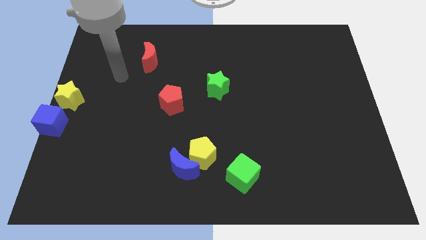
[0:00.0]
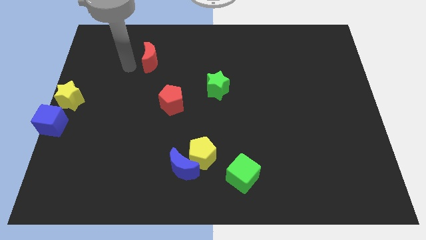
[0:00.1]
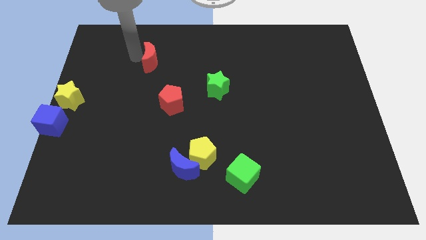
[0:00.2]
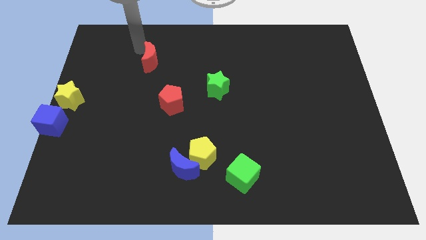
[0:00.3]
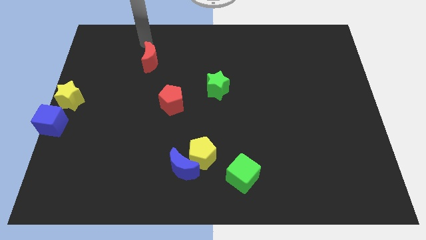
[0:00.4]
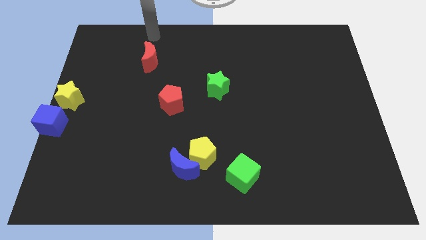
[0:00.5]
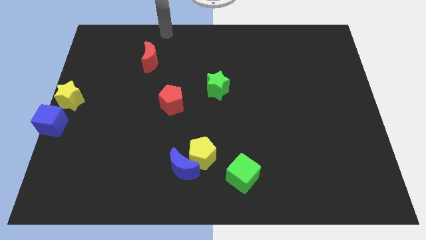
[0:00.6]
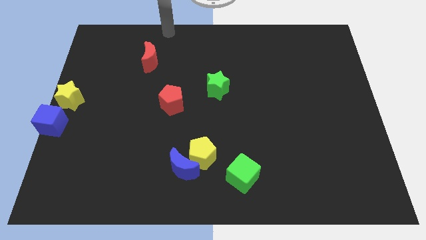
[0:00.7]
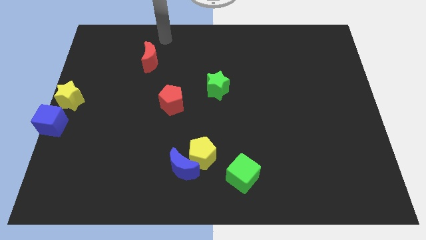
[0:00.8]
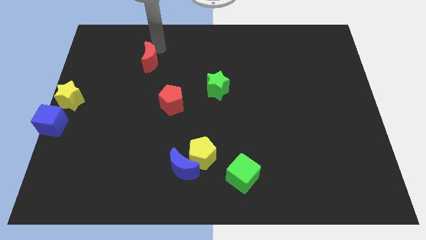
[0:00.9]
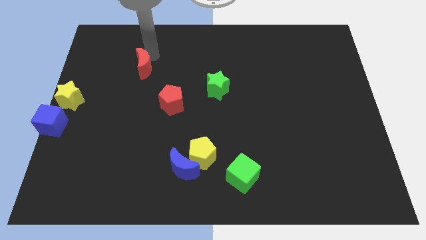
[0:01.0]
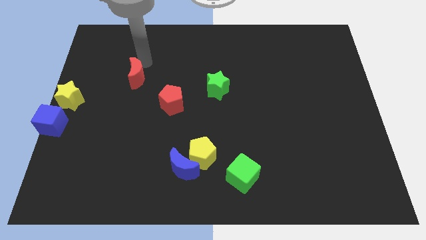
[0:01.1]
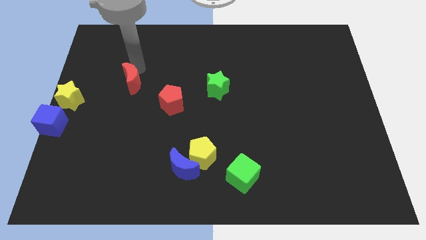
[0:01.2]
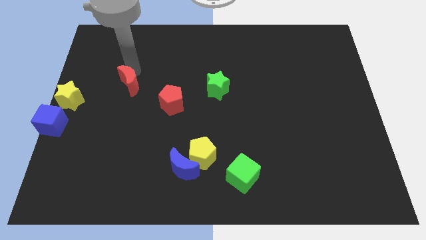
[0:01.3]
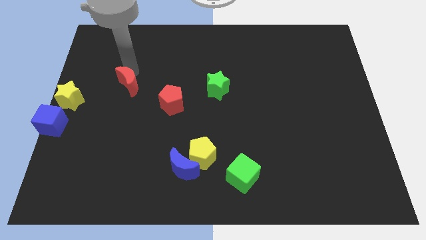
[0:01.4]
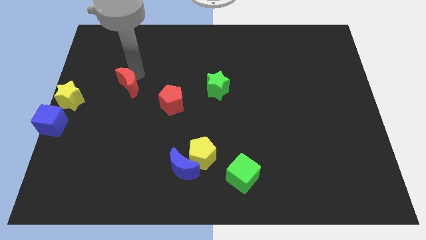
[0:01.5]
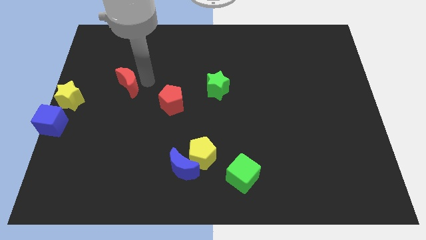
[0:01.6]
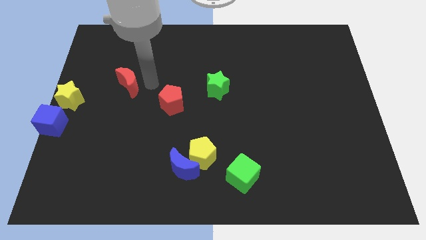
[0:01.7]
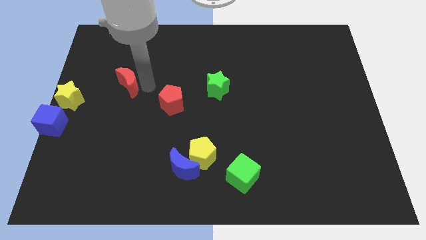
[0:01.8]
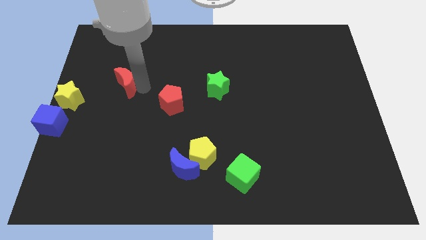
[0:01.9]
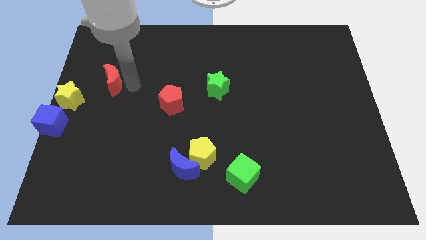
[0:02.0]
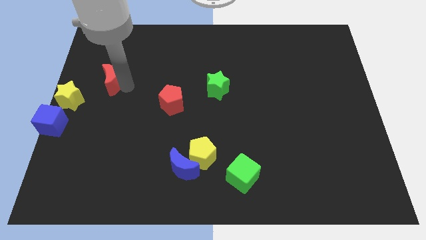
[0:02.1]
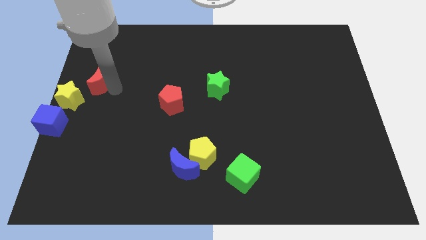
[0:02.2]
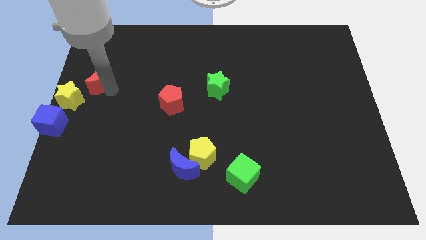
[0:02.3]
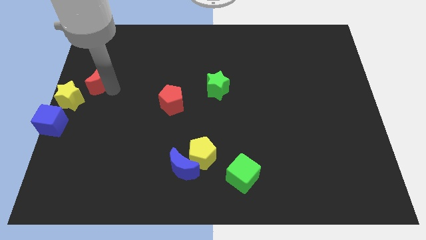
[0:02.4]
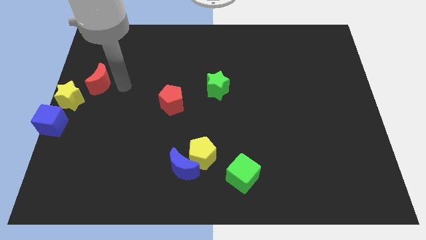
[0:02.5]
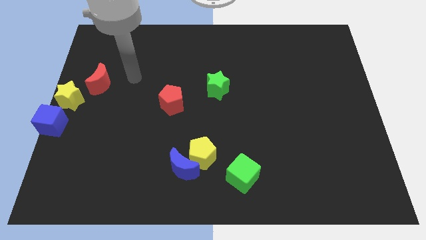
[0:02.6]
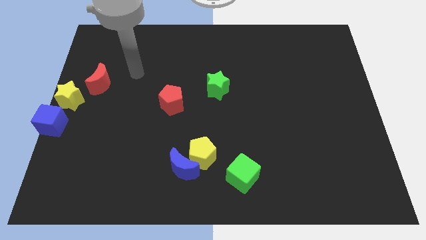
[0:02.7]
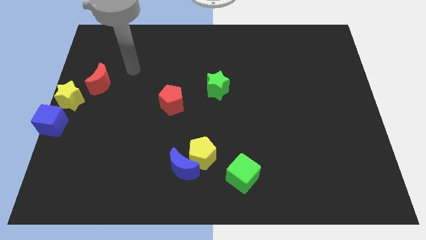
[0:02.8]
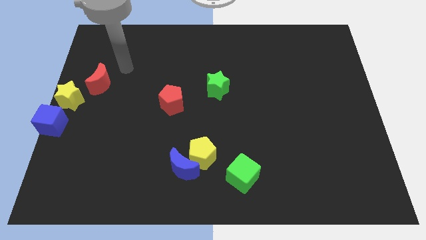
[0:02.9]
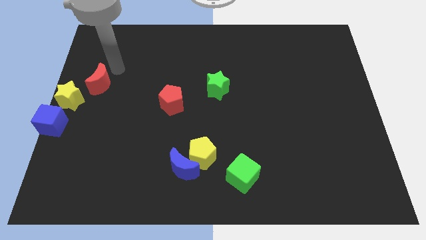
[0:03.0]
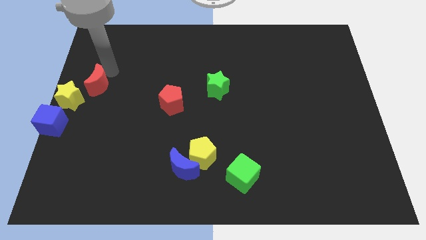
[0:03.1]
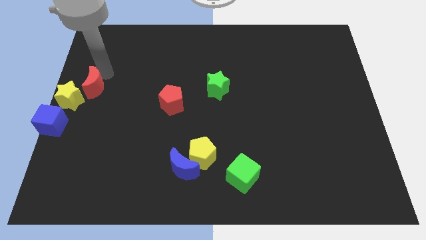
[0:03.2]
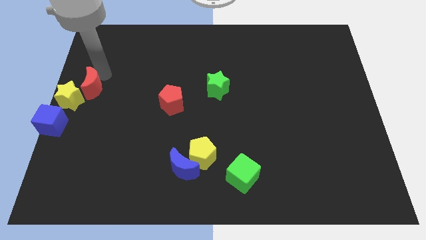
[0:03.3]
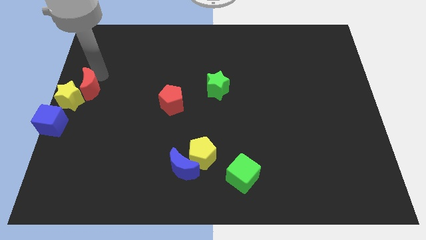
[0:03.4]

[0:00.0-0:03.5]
move the red crescent close to the yellow star

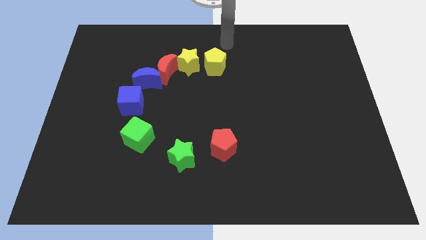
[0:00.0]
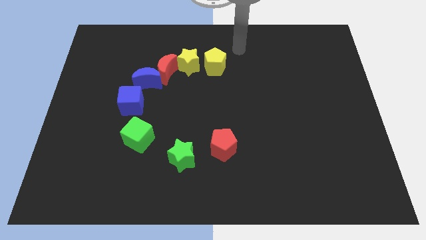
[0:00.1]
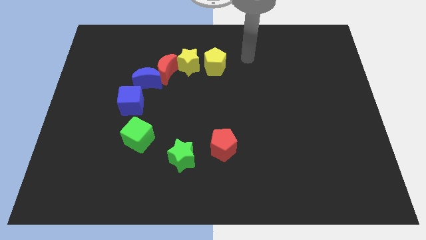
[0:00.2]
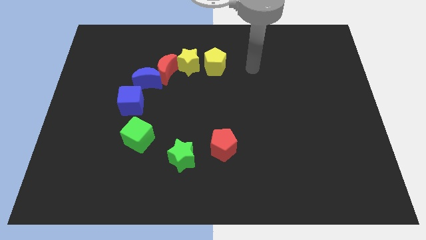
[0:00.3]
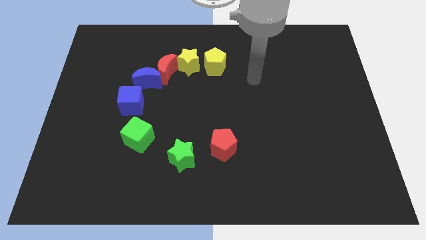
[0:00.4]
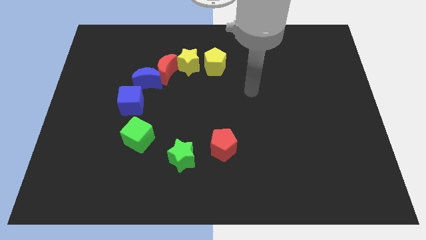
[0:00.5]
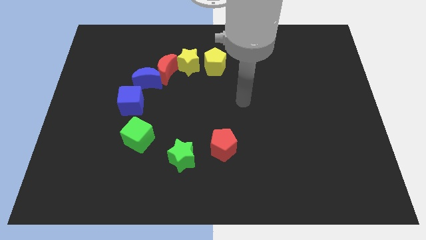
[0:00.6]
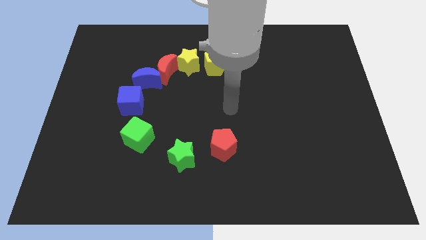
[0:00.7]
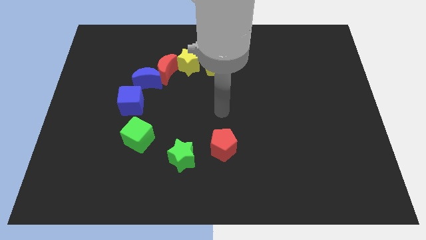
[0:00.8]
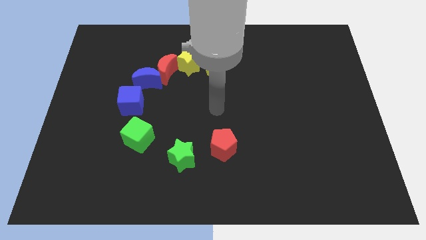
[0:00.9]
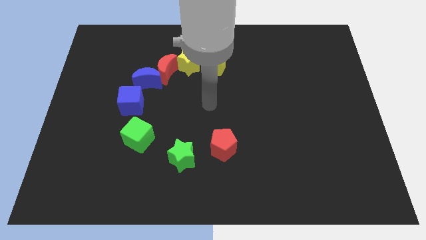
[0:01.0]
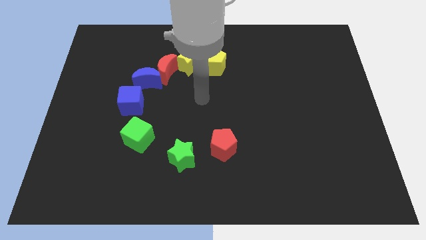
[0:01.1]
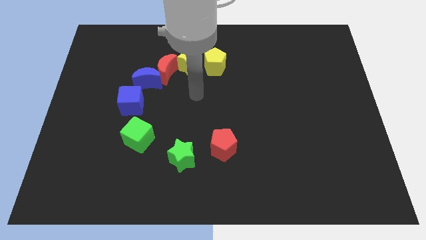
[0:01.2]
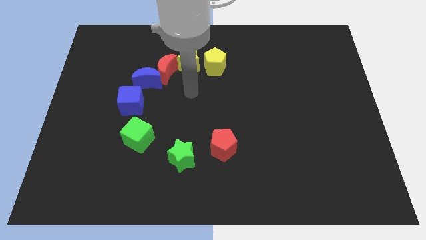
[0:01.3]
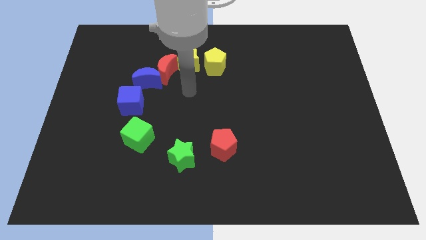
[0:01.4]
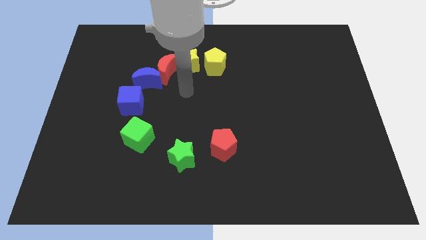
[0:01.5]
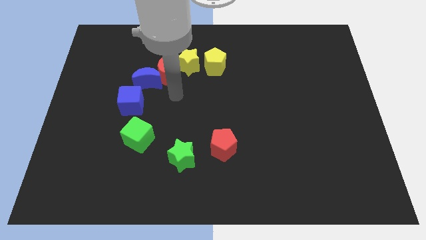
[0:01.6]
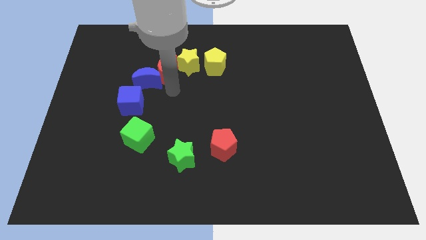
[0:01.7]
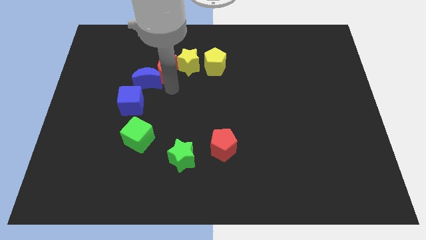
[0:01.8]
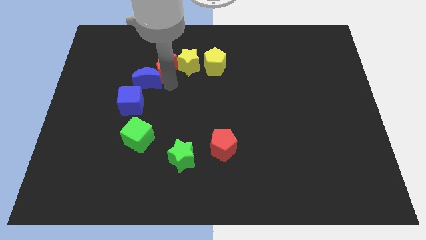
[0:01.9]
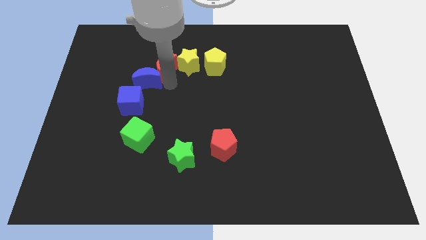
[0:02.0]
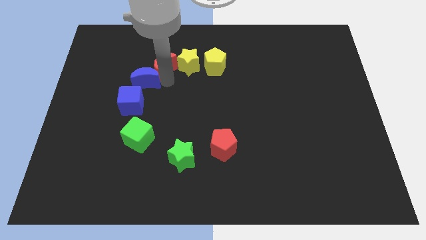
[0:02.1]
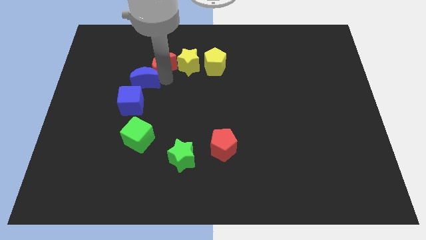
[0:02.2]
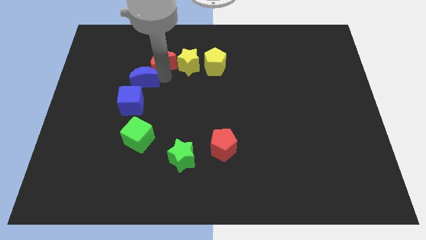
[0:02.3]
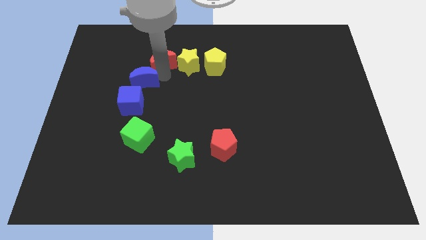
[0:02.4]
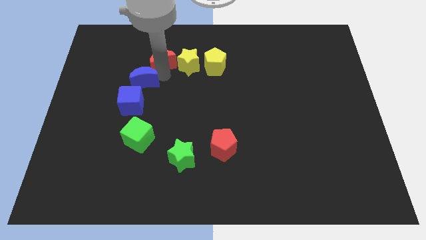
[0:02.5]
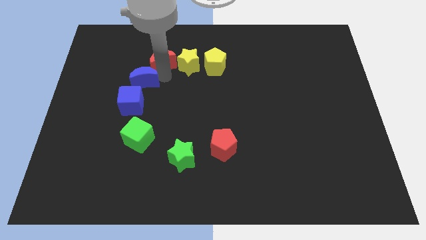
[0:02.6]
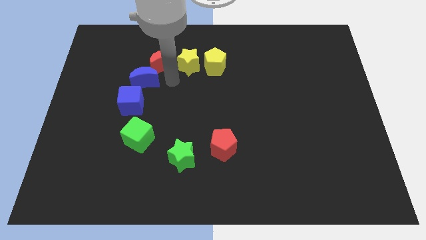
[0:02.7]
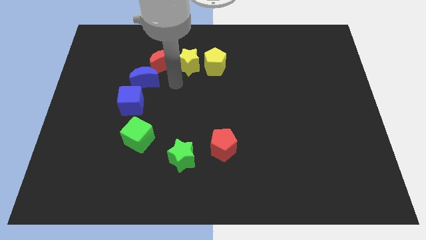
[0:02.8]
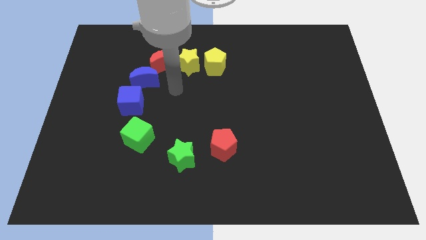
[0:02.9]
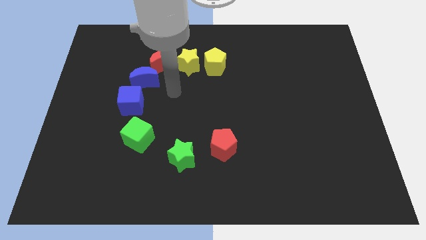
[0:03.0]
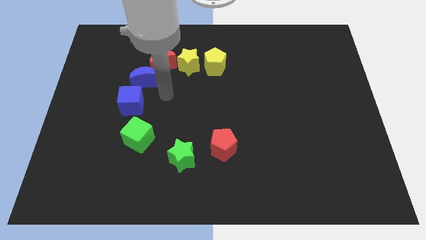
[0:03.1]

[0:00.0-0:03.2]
slide red moon to left of yellow star

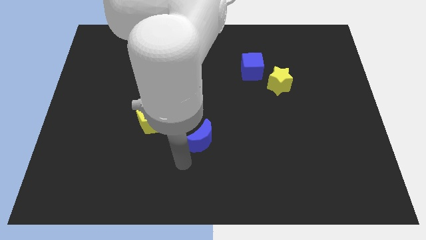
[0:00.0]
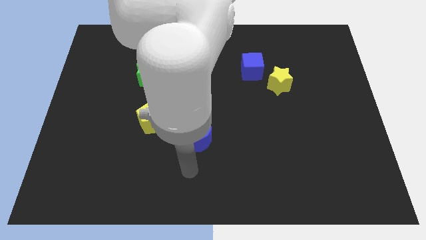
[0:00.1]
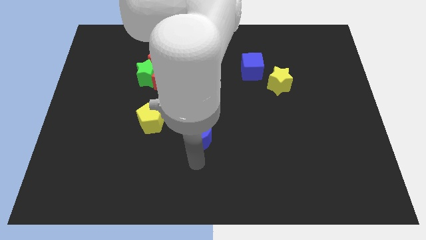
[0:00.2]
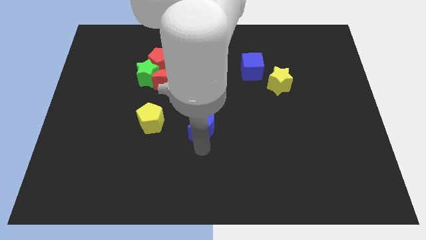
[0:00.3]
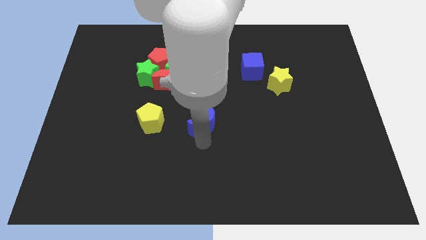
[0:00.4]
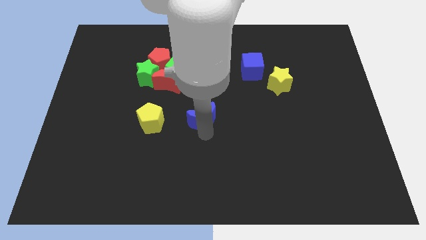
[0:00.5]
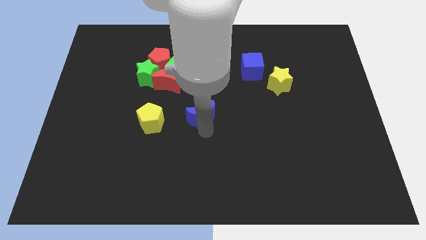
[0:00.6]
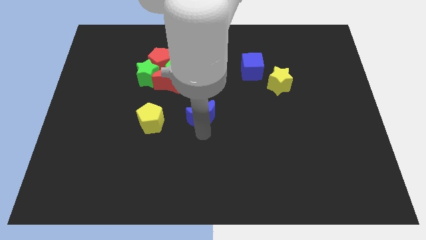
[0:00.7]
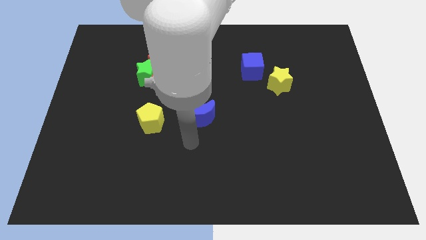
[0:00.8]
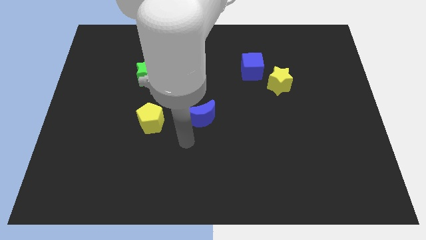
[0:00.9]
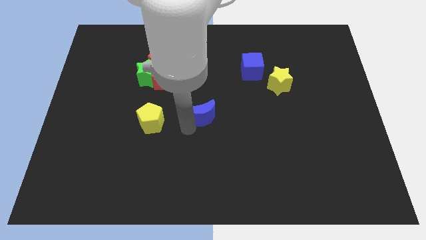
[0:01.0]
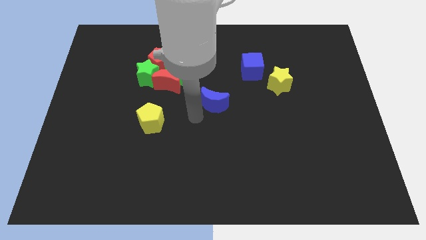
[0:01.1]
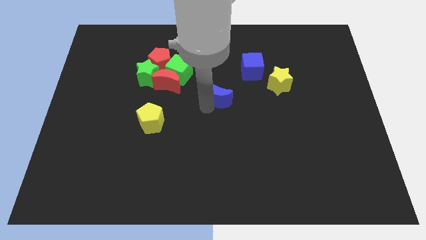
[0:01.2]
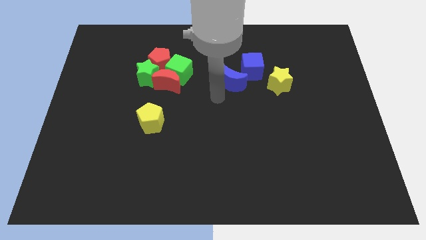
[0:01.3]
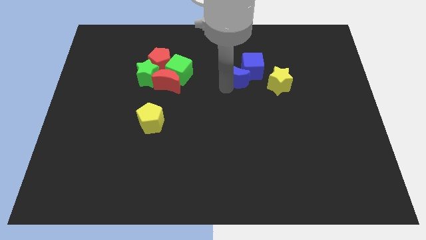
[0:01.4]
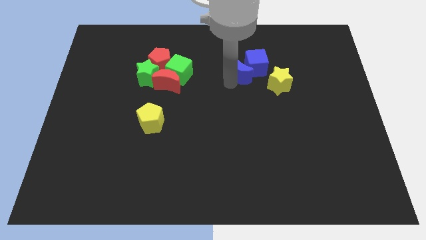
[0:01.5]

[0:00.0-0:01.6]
push the blue moon into the blue cube

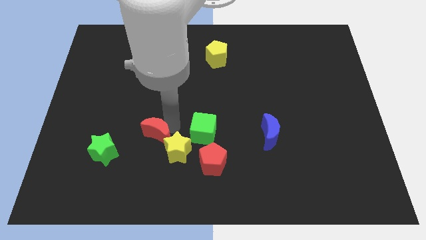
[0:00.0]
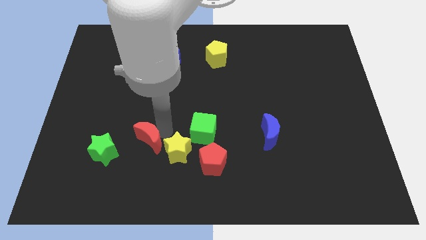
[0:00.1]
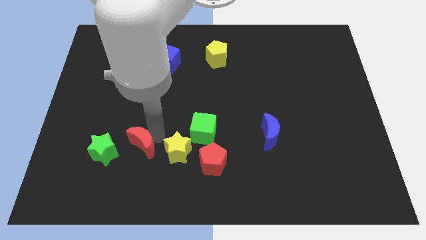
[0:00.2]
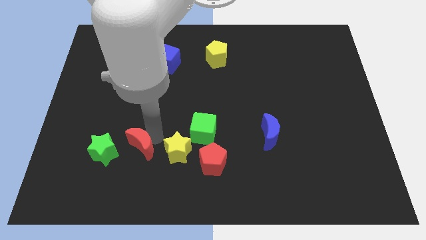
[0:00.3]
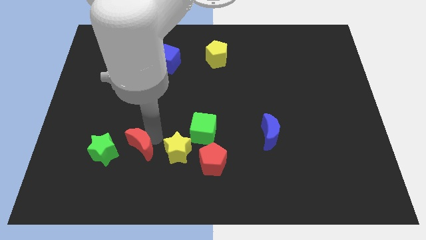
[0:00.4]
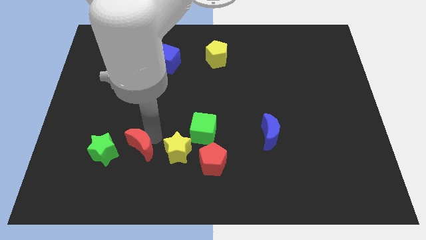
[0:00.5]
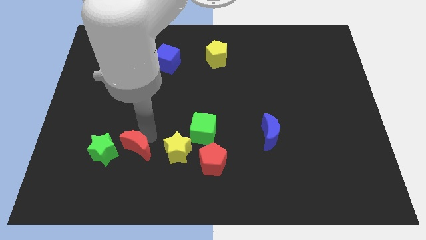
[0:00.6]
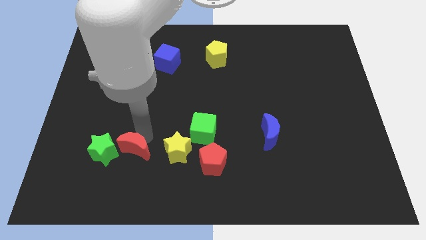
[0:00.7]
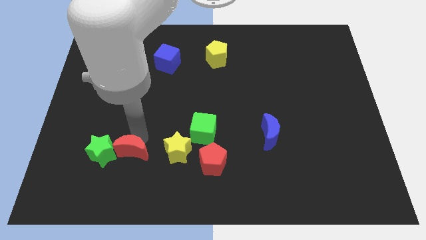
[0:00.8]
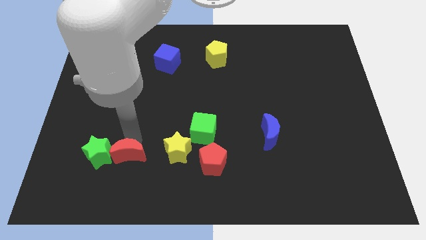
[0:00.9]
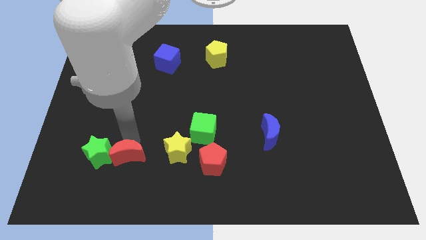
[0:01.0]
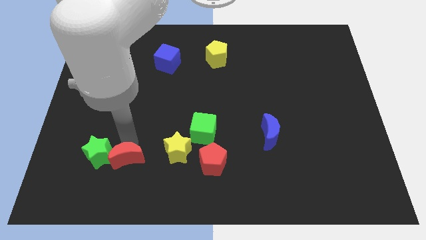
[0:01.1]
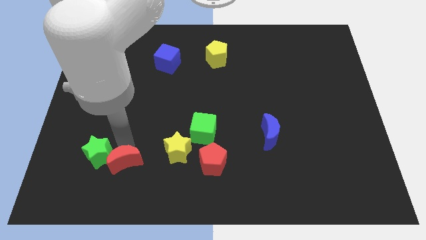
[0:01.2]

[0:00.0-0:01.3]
move the red crescent to the right of the green star
